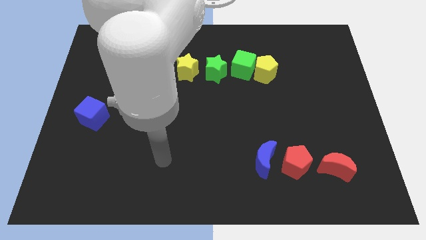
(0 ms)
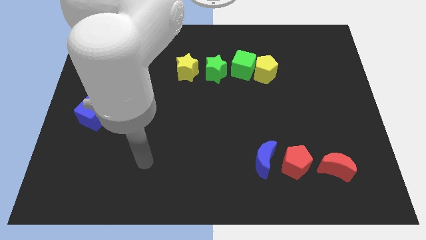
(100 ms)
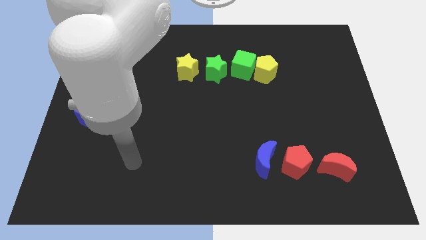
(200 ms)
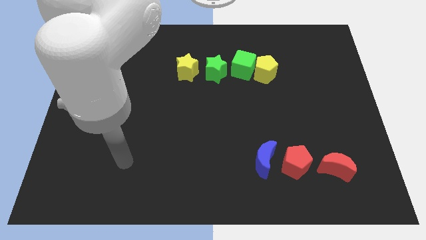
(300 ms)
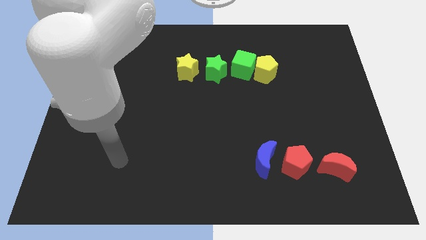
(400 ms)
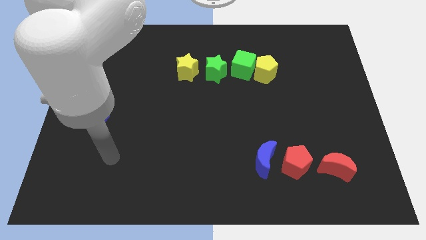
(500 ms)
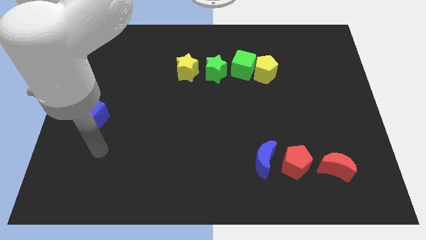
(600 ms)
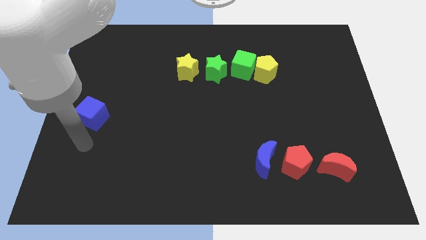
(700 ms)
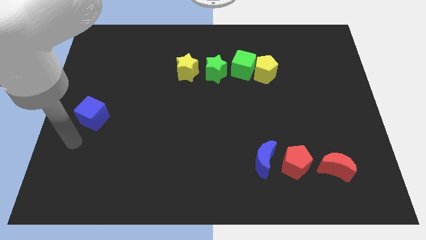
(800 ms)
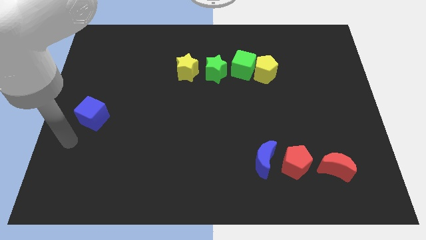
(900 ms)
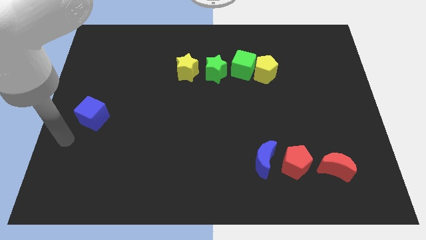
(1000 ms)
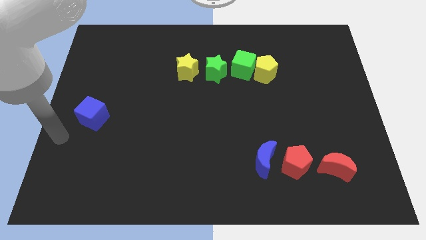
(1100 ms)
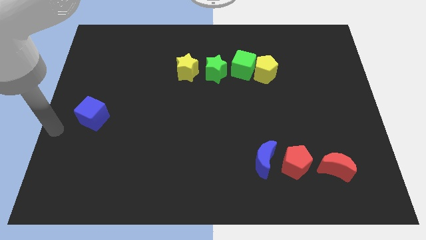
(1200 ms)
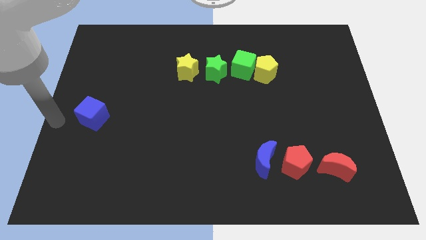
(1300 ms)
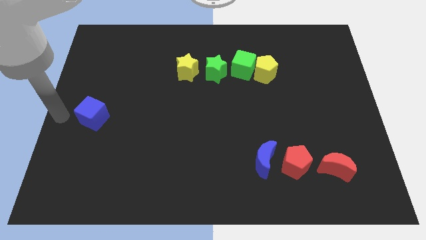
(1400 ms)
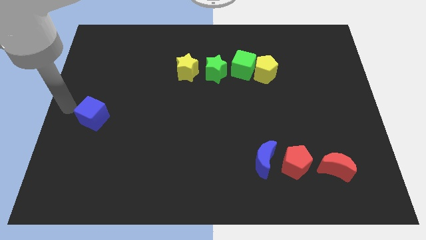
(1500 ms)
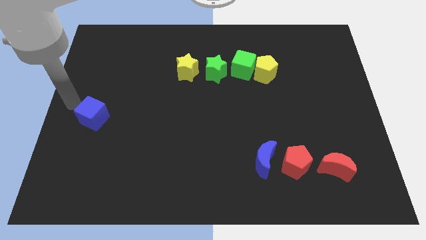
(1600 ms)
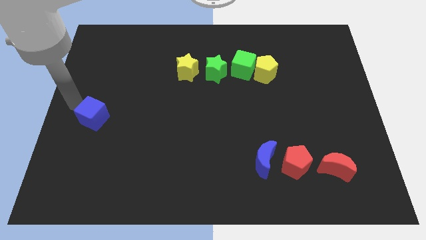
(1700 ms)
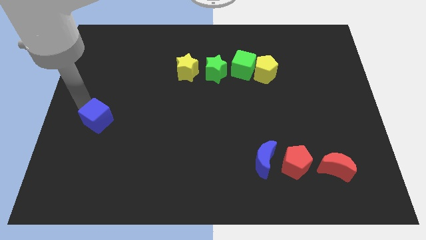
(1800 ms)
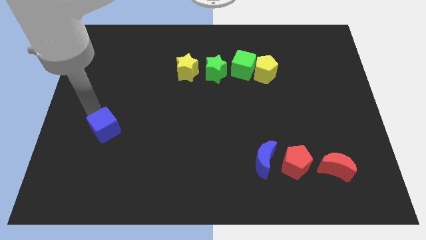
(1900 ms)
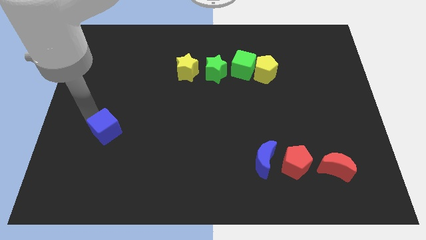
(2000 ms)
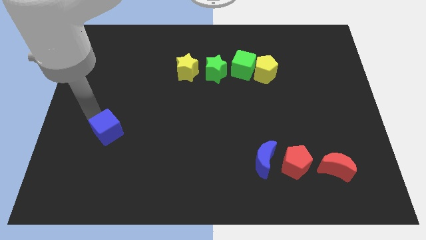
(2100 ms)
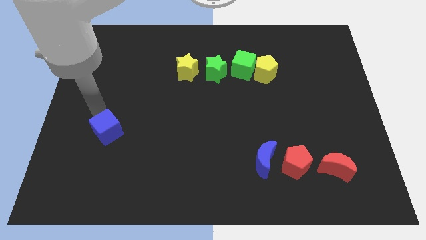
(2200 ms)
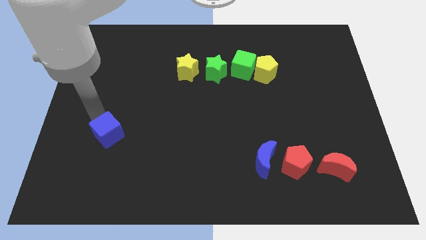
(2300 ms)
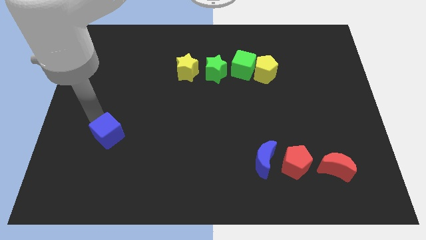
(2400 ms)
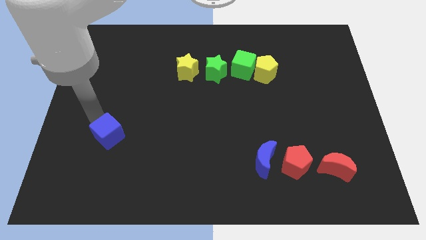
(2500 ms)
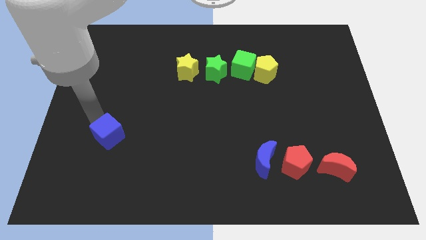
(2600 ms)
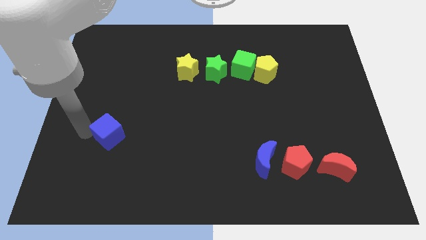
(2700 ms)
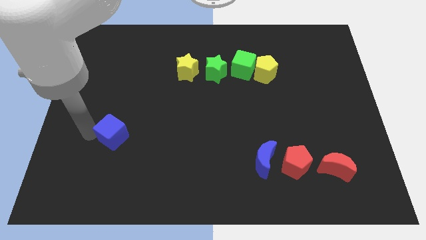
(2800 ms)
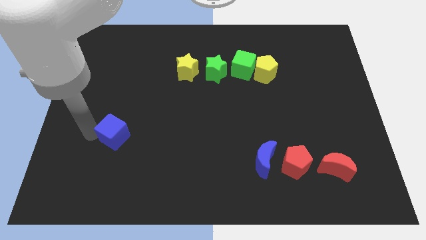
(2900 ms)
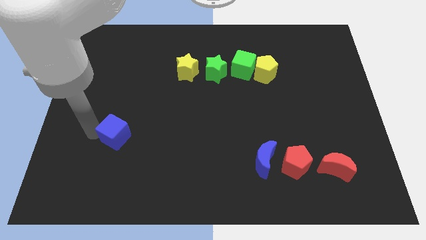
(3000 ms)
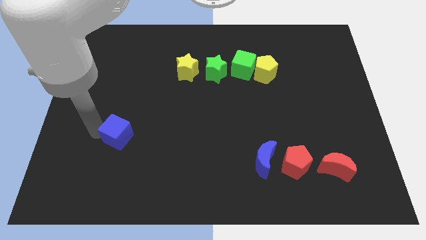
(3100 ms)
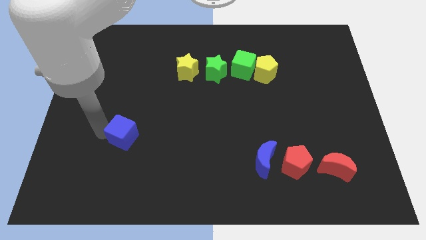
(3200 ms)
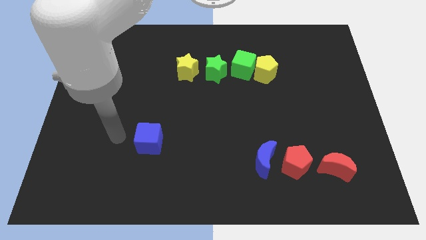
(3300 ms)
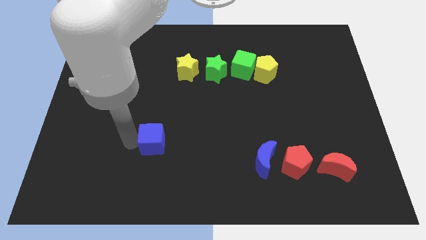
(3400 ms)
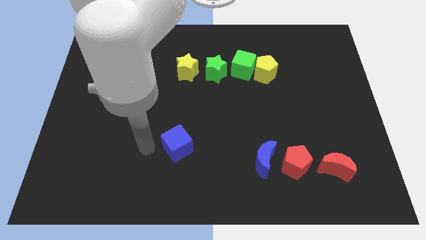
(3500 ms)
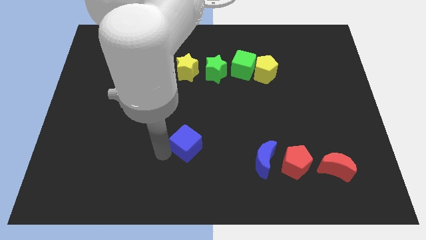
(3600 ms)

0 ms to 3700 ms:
push the blue cube towards the blue crescent

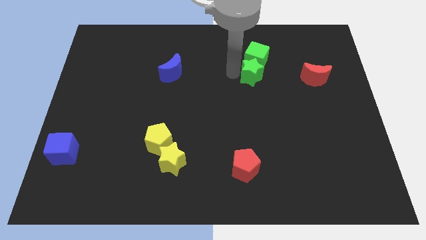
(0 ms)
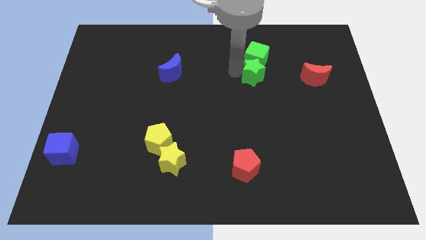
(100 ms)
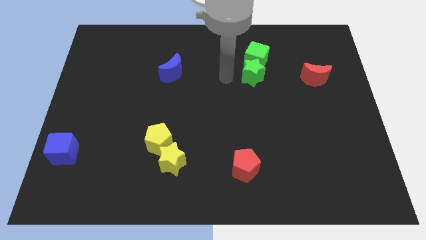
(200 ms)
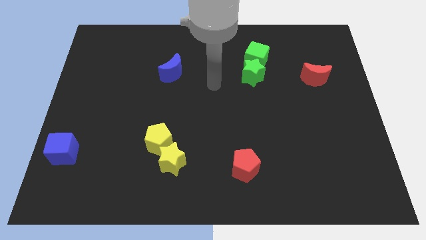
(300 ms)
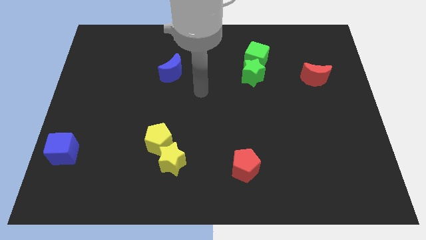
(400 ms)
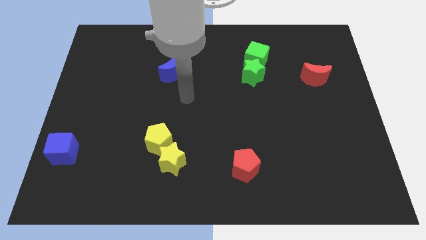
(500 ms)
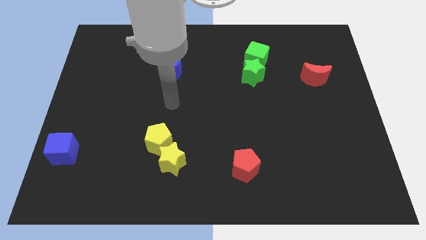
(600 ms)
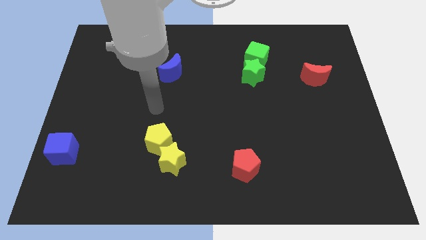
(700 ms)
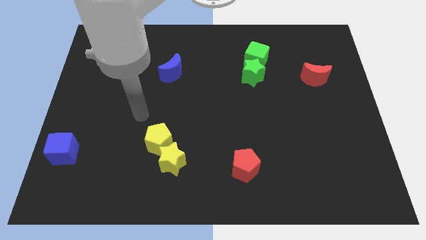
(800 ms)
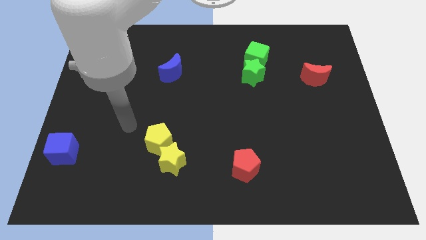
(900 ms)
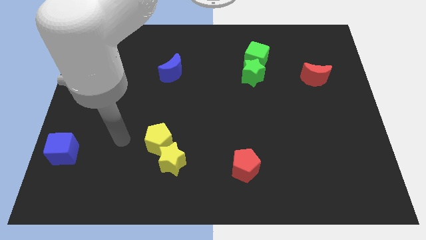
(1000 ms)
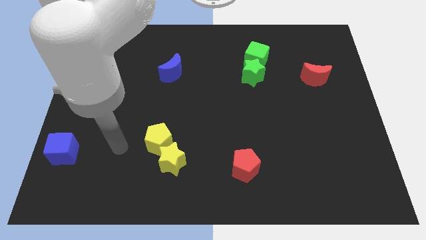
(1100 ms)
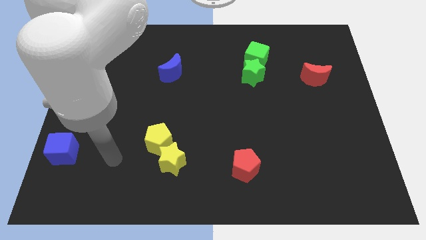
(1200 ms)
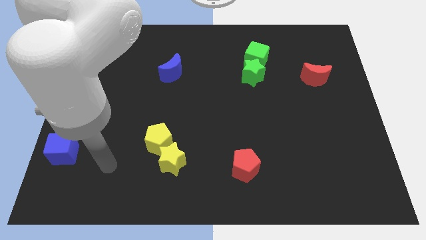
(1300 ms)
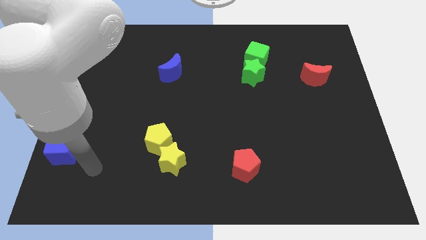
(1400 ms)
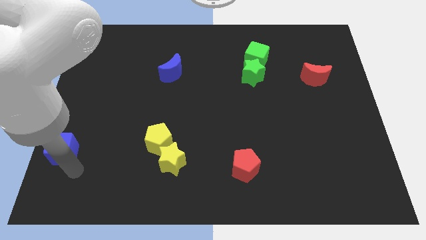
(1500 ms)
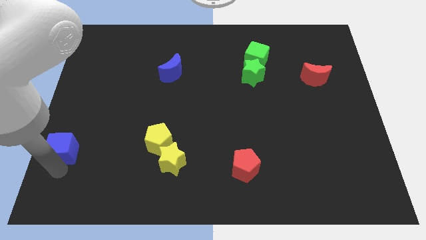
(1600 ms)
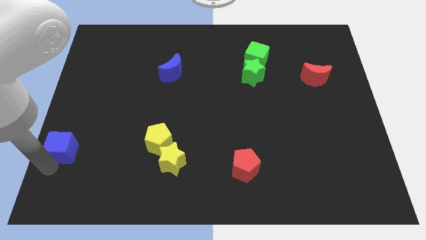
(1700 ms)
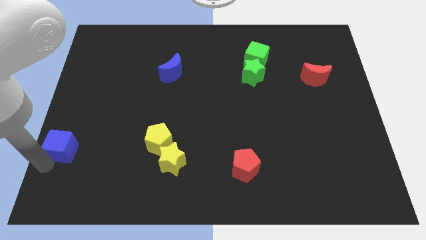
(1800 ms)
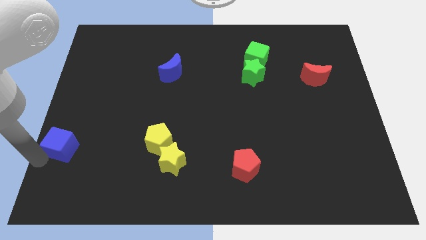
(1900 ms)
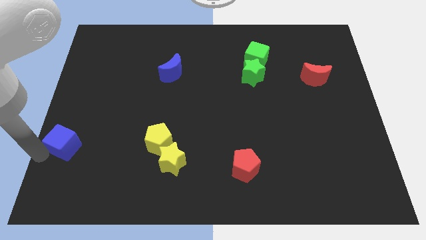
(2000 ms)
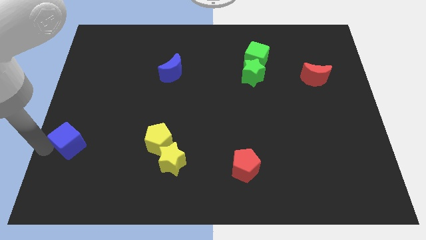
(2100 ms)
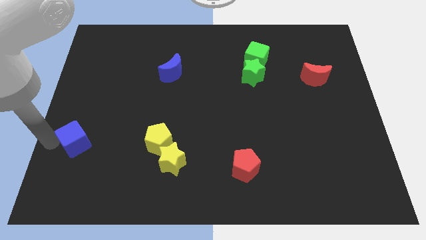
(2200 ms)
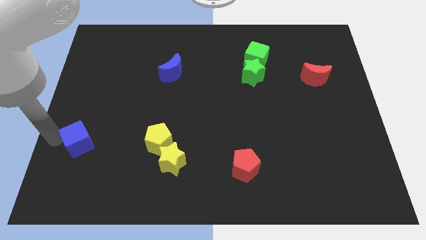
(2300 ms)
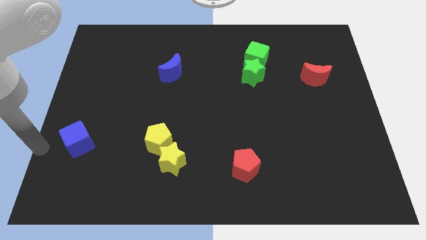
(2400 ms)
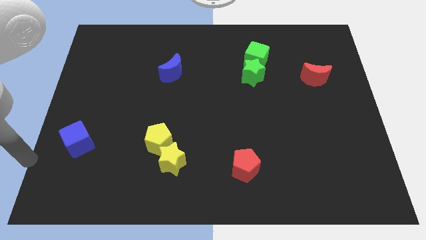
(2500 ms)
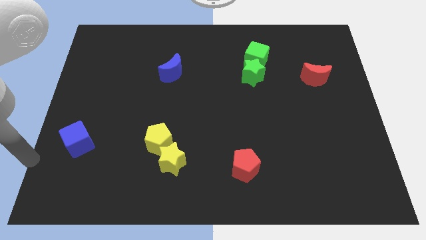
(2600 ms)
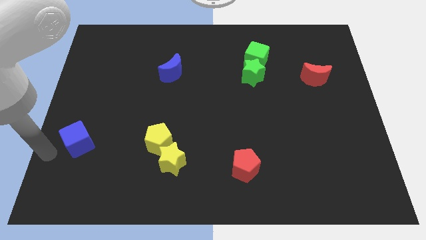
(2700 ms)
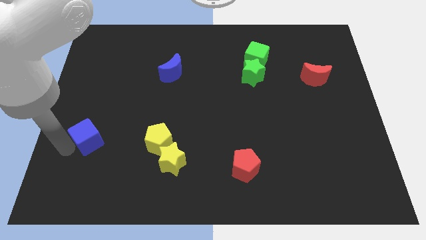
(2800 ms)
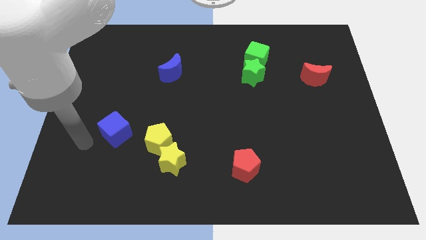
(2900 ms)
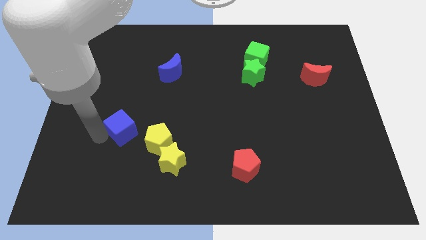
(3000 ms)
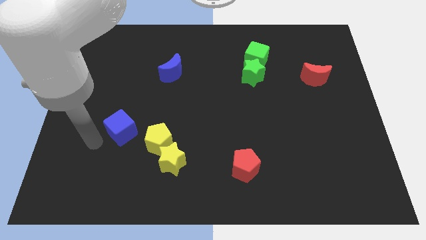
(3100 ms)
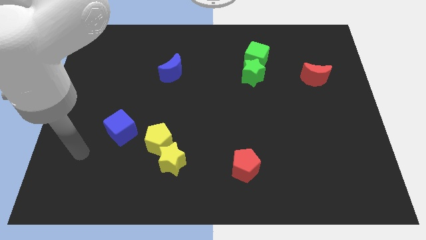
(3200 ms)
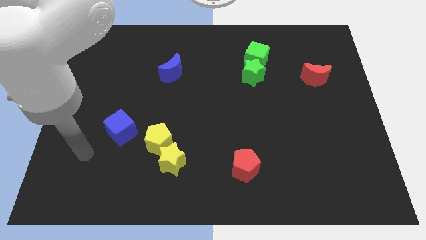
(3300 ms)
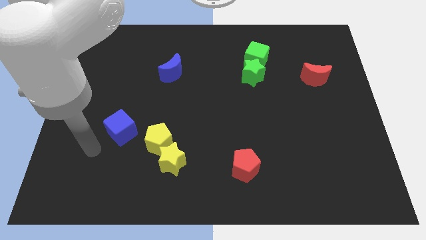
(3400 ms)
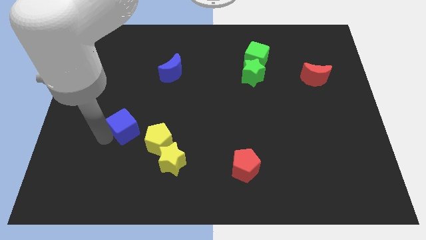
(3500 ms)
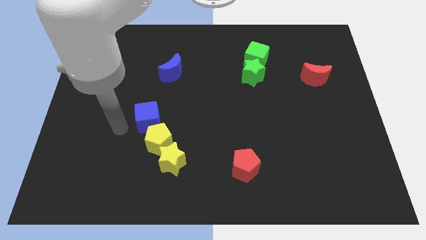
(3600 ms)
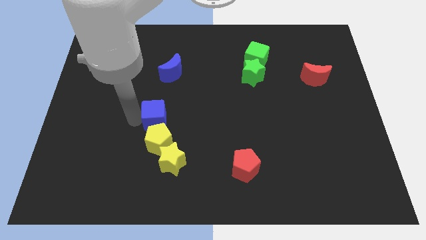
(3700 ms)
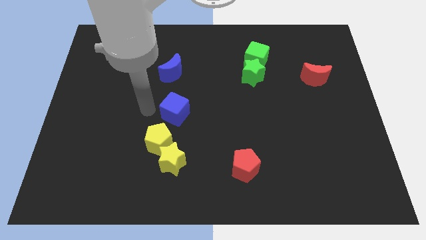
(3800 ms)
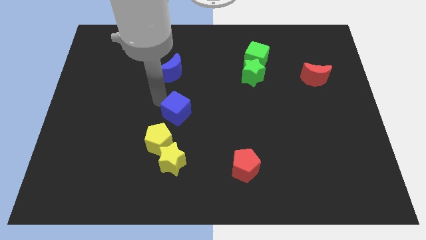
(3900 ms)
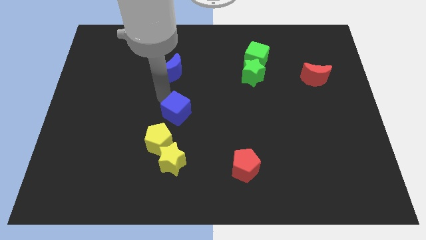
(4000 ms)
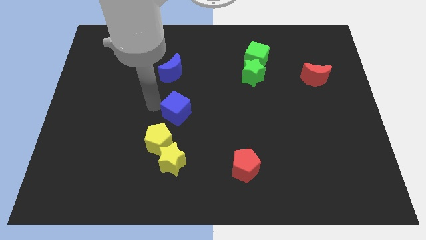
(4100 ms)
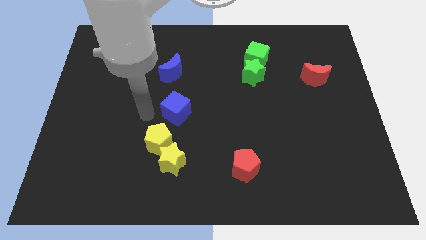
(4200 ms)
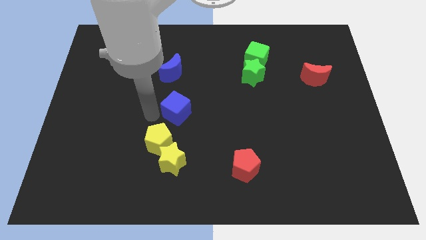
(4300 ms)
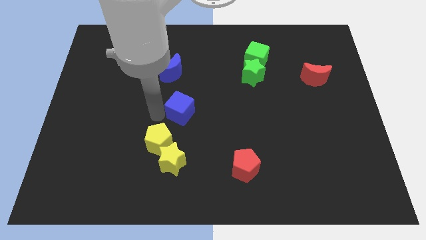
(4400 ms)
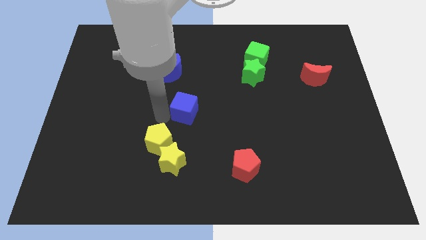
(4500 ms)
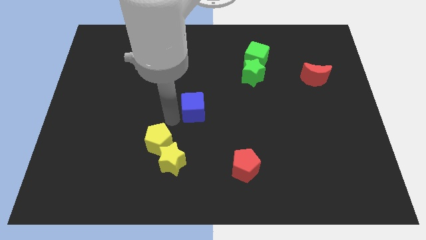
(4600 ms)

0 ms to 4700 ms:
push the blue cube to the right side of the board

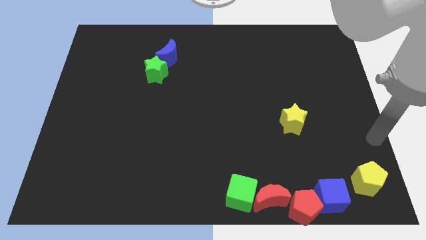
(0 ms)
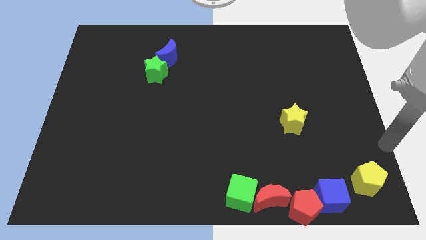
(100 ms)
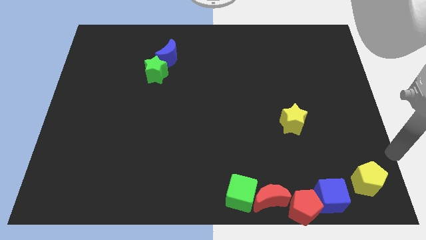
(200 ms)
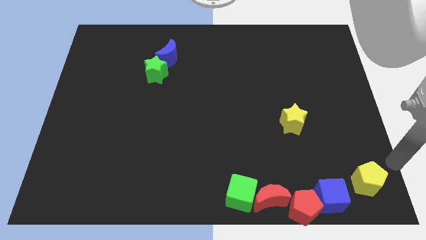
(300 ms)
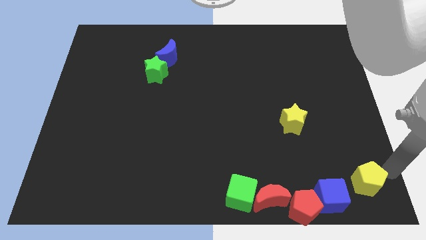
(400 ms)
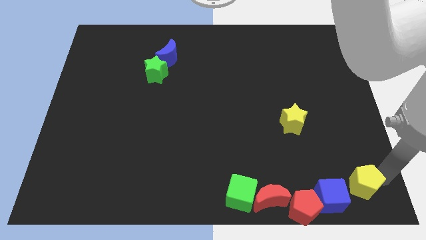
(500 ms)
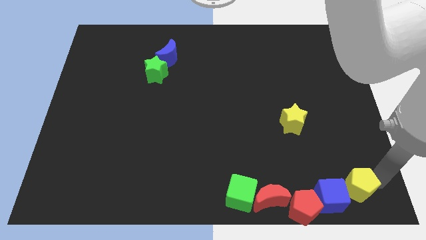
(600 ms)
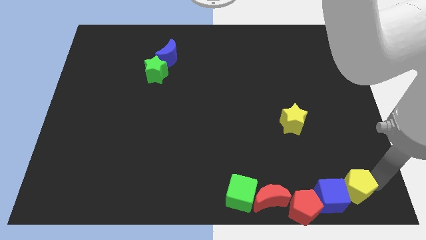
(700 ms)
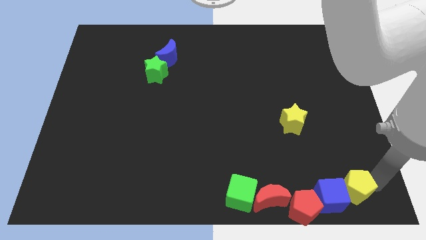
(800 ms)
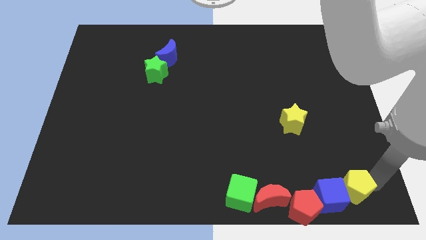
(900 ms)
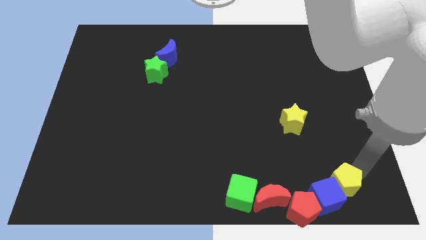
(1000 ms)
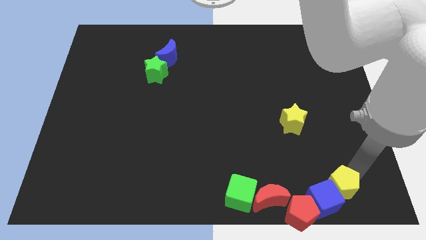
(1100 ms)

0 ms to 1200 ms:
push the yellow pentagon into the blue cube
